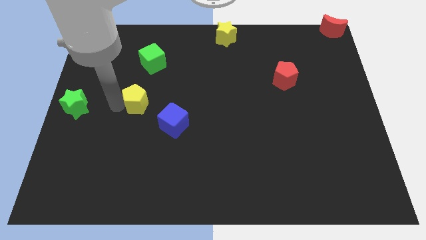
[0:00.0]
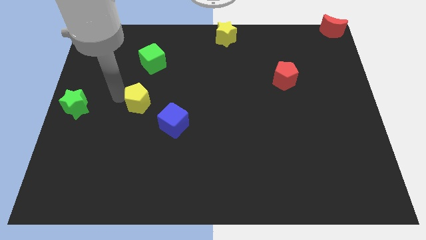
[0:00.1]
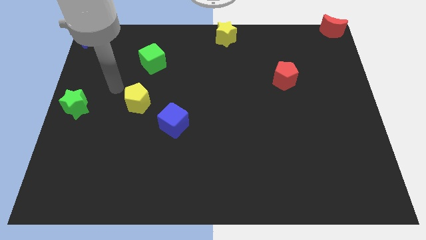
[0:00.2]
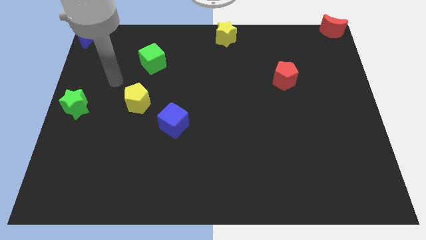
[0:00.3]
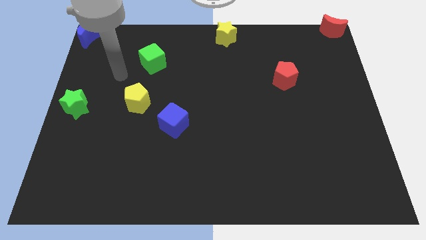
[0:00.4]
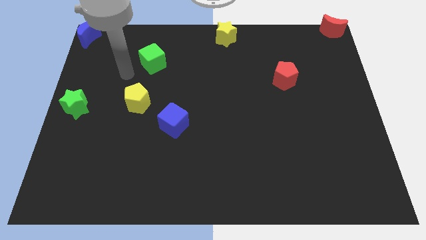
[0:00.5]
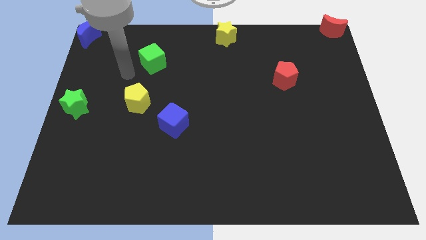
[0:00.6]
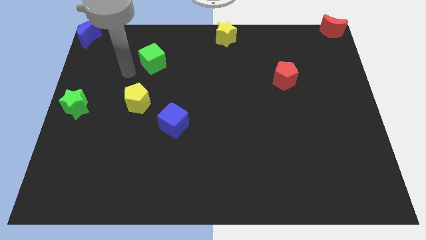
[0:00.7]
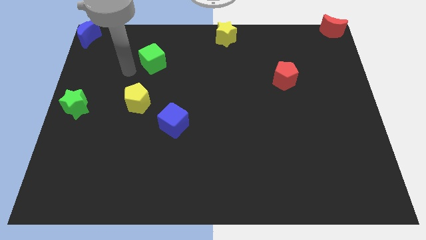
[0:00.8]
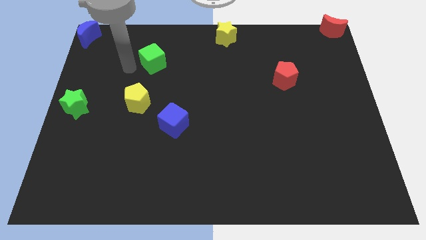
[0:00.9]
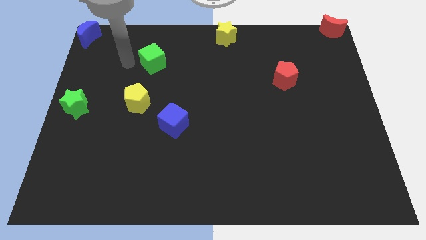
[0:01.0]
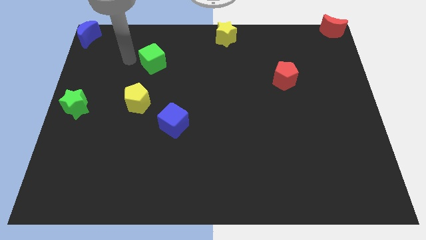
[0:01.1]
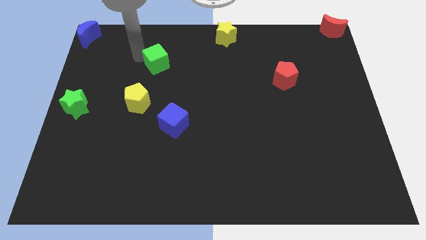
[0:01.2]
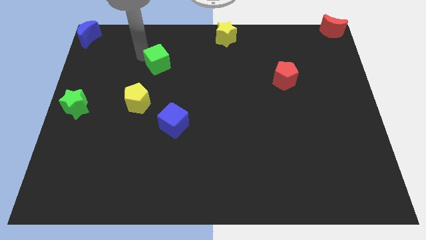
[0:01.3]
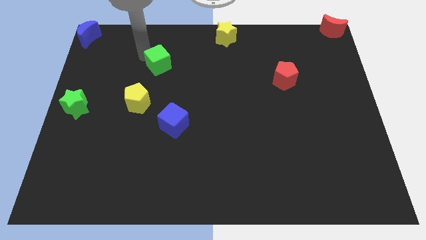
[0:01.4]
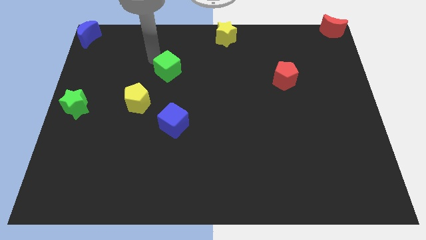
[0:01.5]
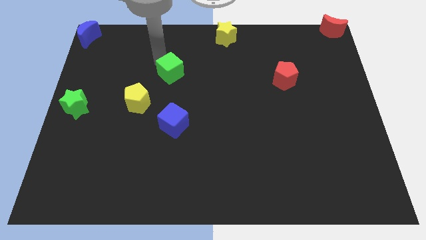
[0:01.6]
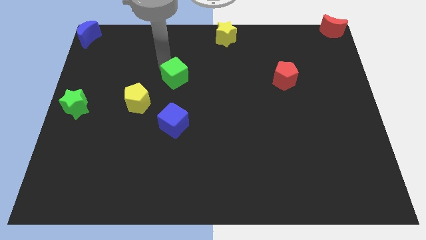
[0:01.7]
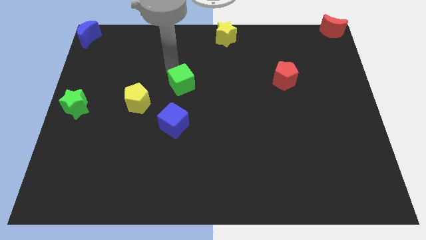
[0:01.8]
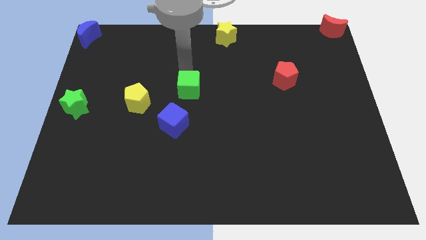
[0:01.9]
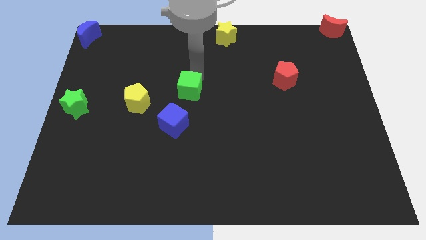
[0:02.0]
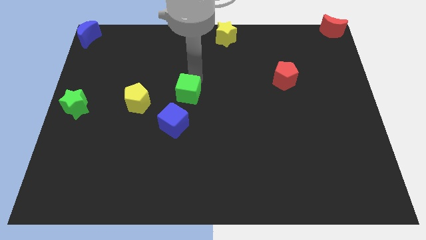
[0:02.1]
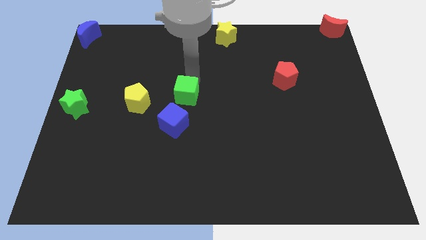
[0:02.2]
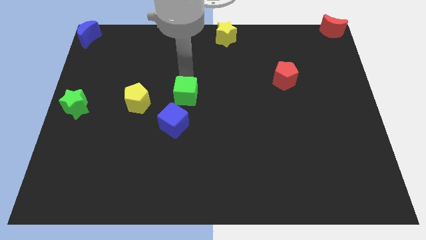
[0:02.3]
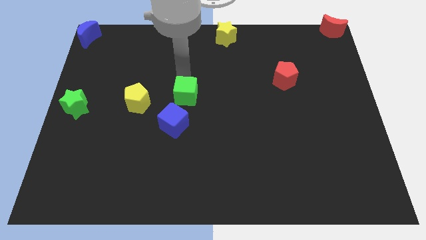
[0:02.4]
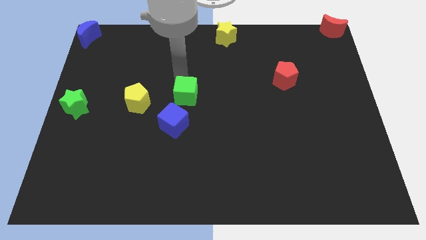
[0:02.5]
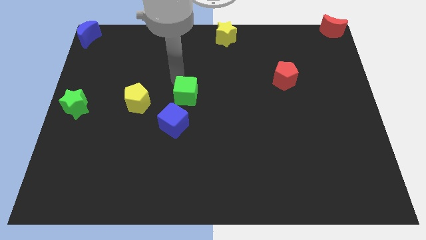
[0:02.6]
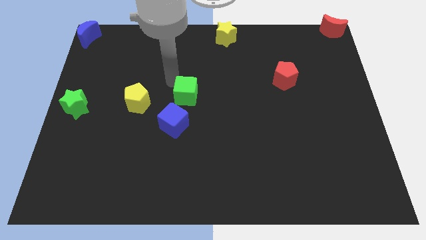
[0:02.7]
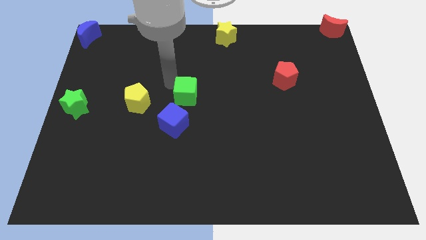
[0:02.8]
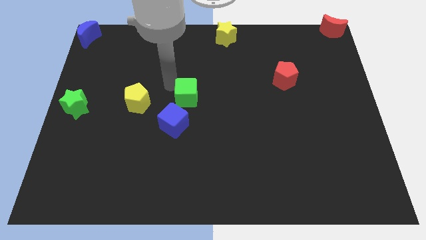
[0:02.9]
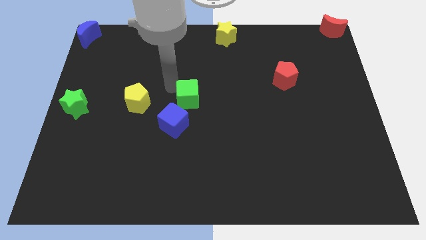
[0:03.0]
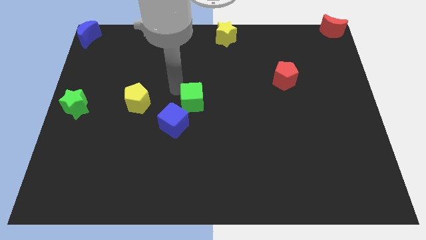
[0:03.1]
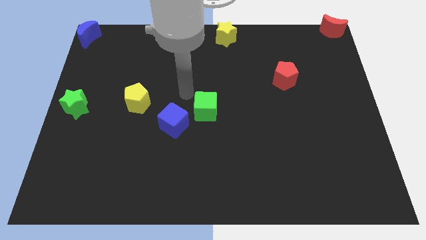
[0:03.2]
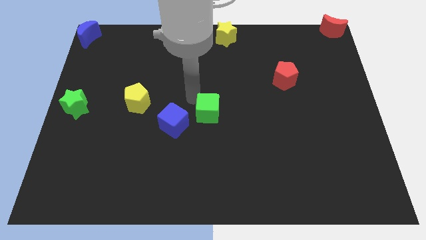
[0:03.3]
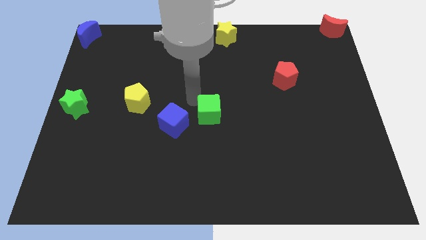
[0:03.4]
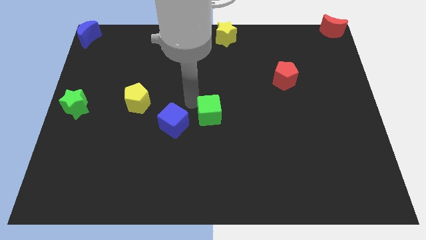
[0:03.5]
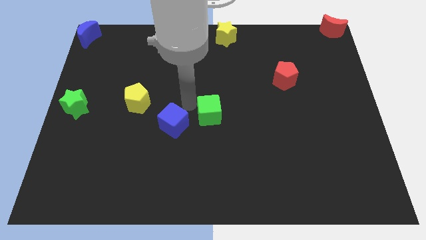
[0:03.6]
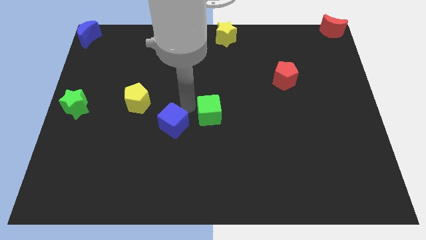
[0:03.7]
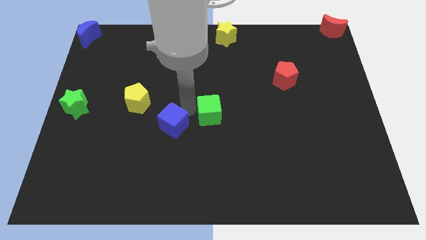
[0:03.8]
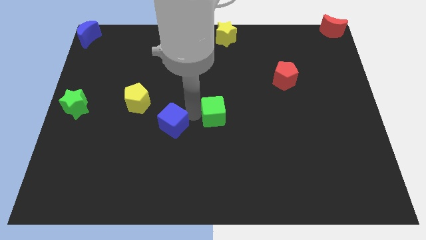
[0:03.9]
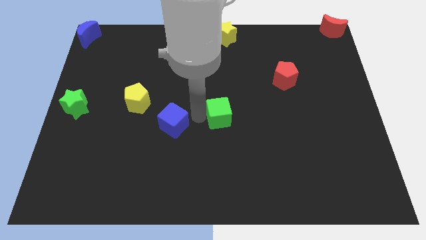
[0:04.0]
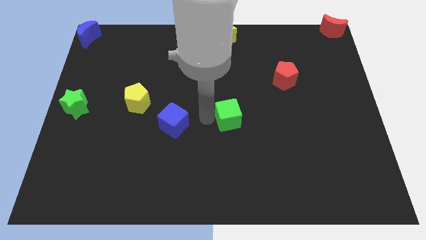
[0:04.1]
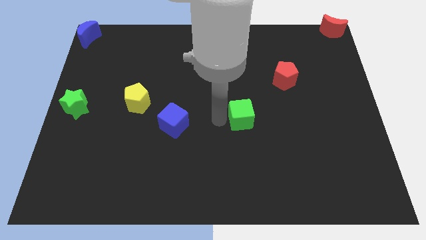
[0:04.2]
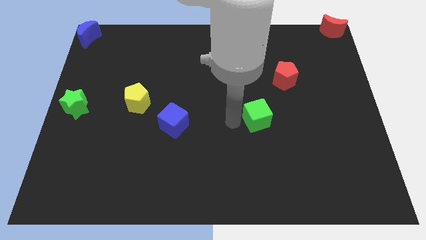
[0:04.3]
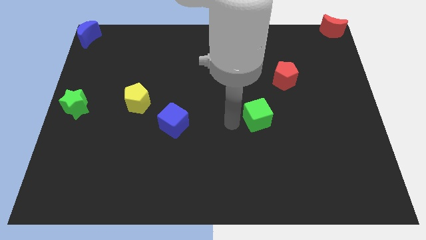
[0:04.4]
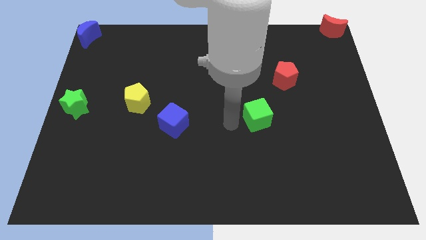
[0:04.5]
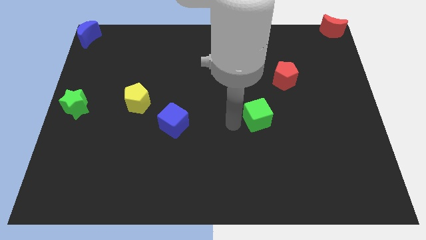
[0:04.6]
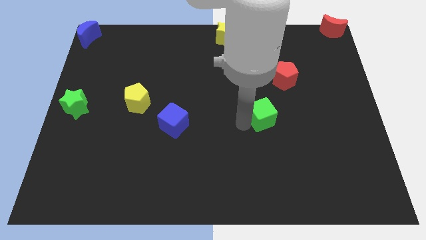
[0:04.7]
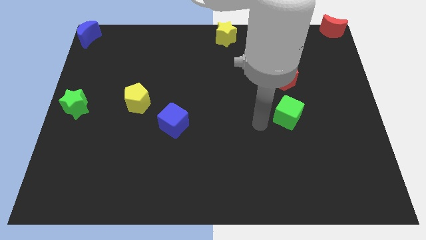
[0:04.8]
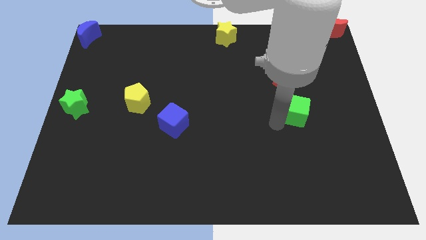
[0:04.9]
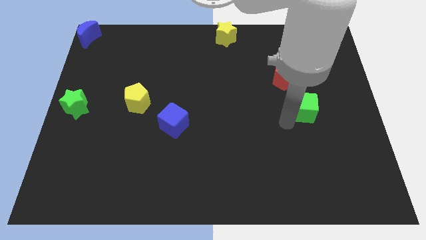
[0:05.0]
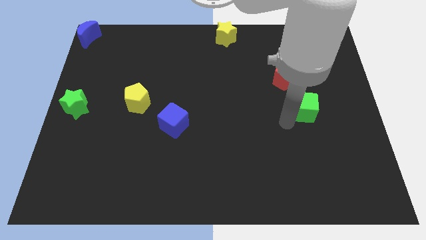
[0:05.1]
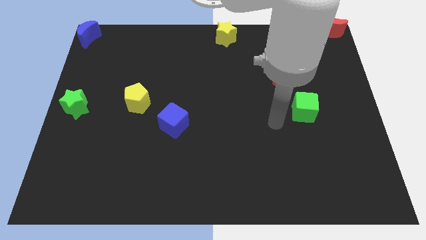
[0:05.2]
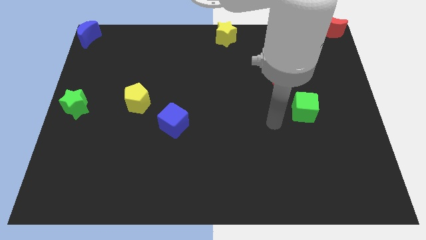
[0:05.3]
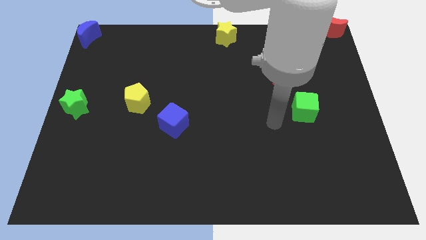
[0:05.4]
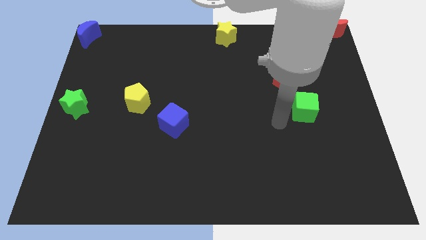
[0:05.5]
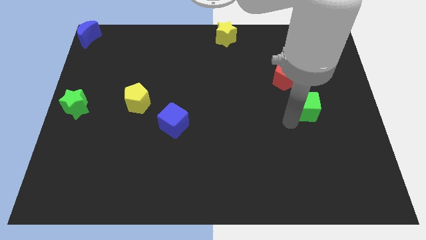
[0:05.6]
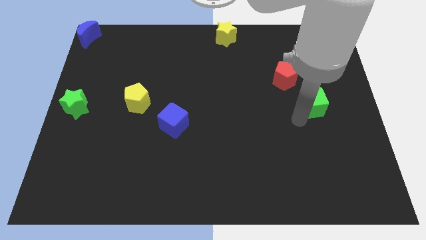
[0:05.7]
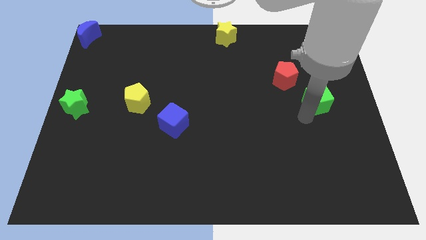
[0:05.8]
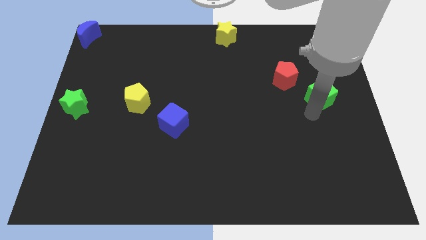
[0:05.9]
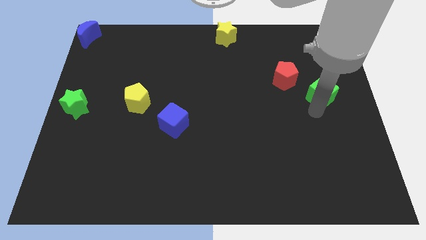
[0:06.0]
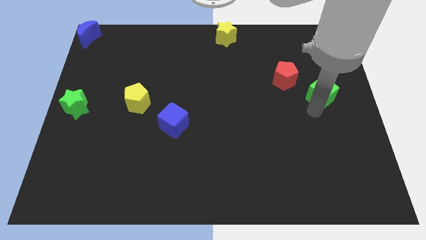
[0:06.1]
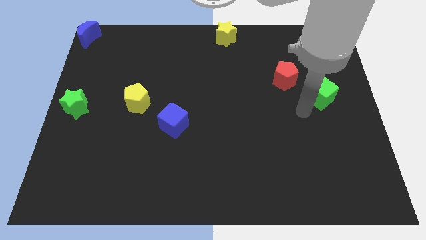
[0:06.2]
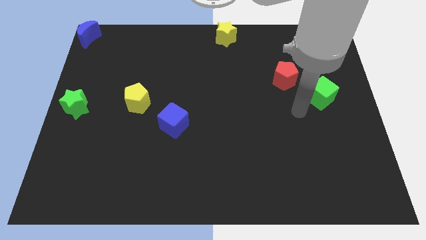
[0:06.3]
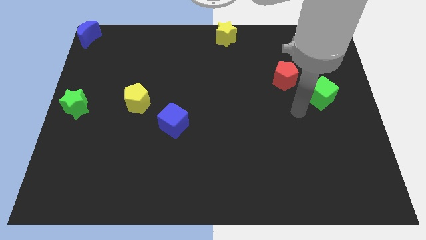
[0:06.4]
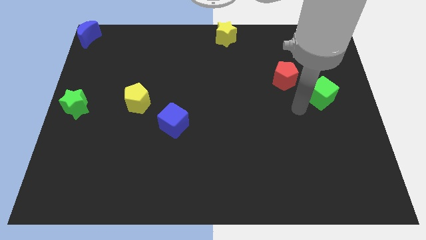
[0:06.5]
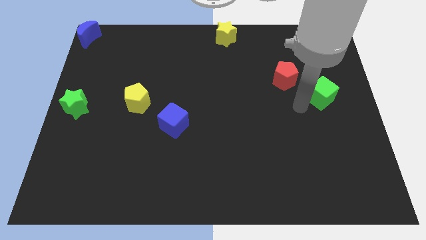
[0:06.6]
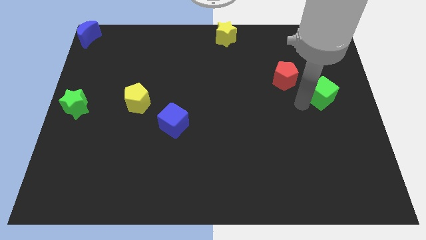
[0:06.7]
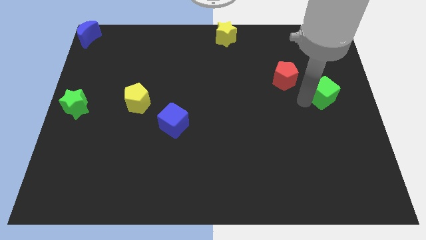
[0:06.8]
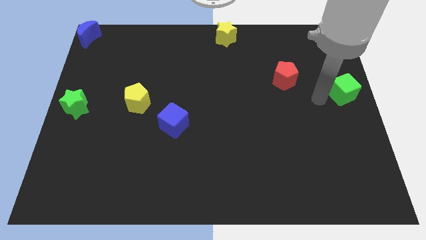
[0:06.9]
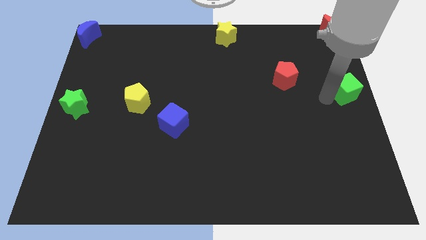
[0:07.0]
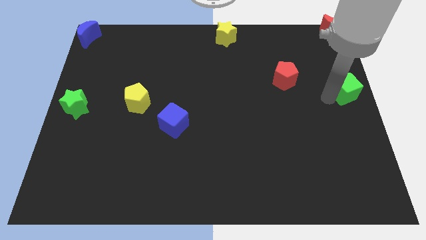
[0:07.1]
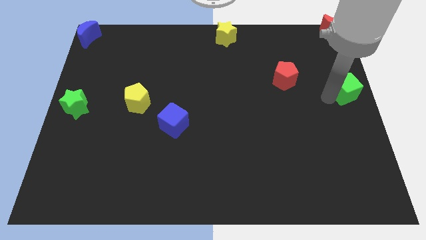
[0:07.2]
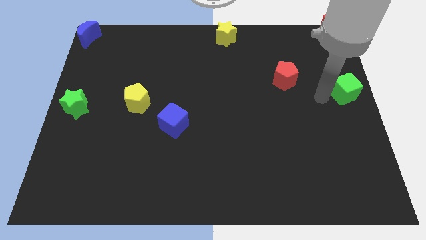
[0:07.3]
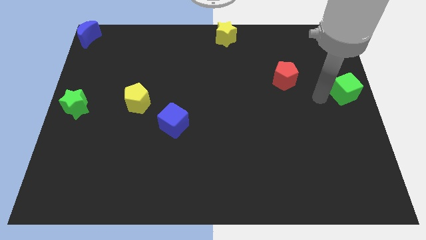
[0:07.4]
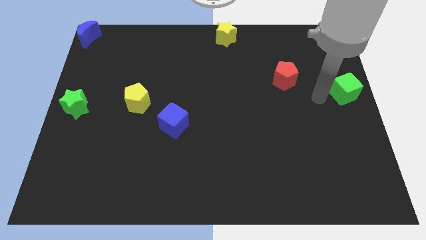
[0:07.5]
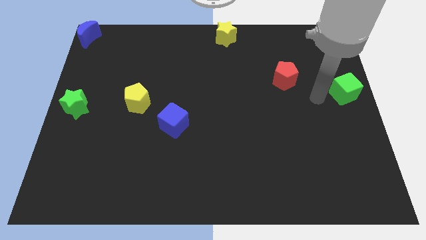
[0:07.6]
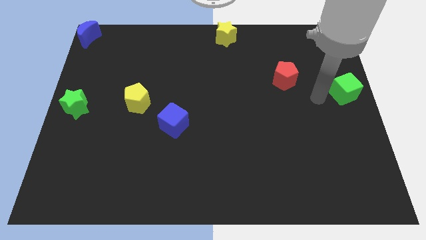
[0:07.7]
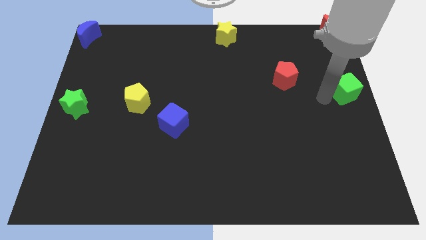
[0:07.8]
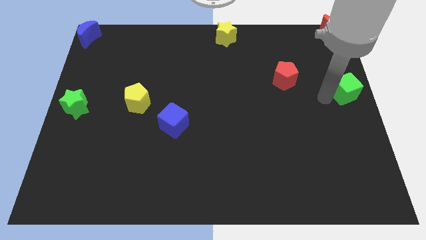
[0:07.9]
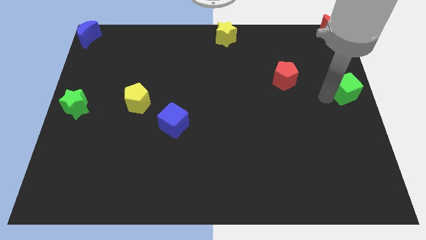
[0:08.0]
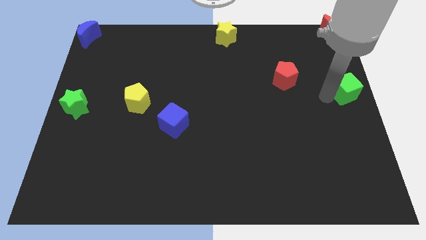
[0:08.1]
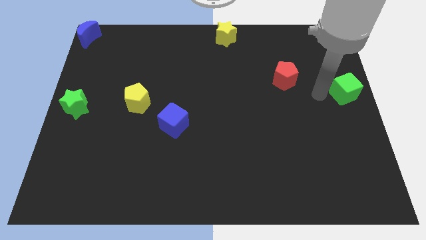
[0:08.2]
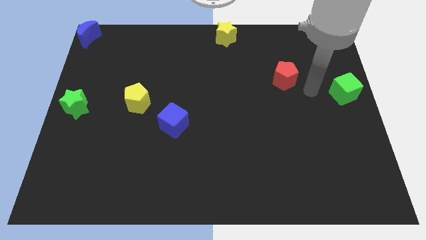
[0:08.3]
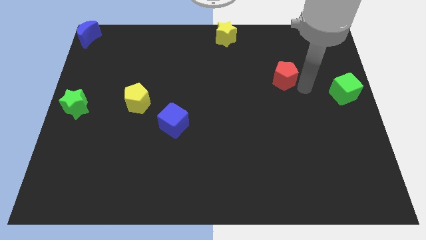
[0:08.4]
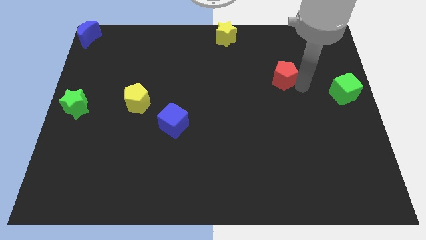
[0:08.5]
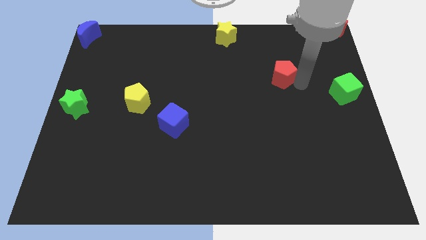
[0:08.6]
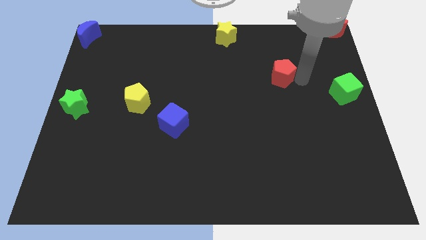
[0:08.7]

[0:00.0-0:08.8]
move green cube to the right center of the board
